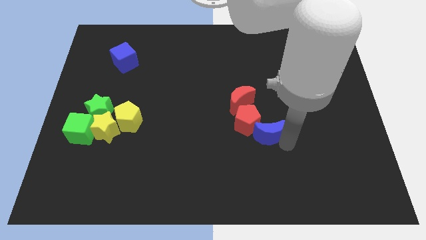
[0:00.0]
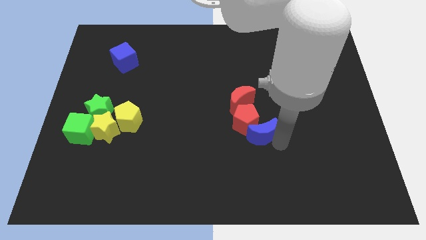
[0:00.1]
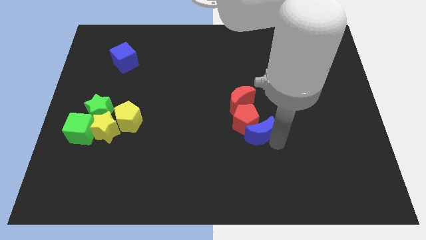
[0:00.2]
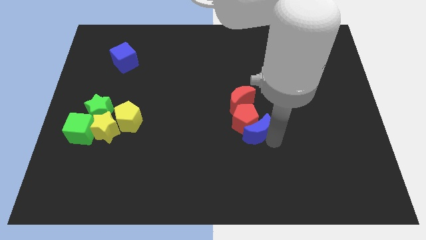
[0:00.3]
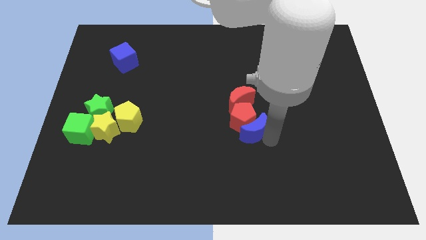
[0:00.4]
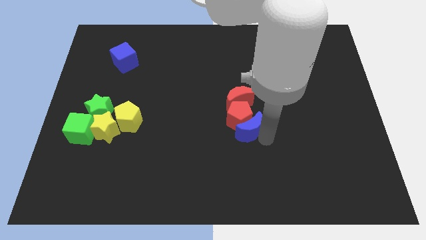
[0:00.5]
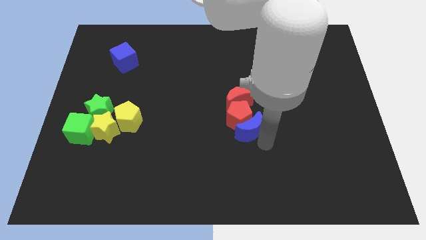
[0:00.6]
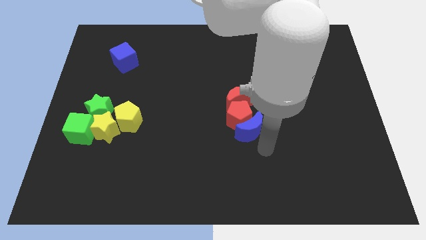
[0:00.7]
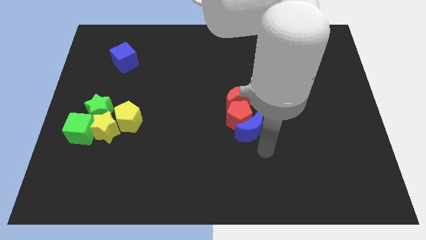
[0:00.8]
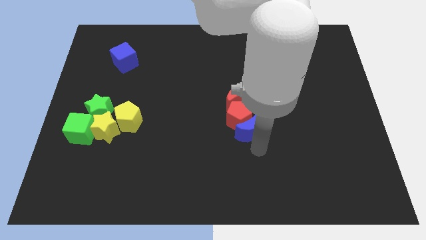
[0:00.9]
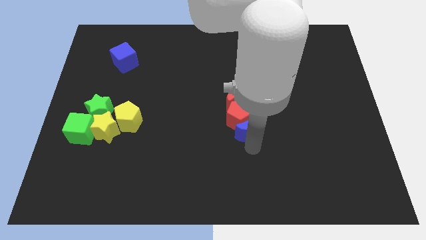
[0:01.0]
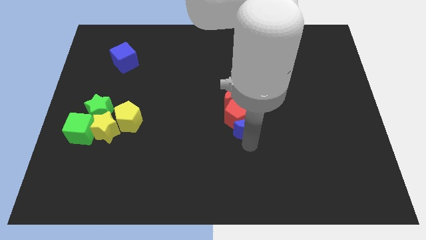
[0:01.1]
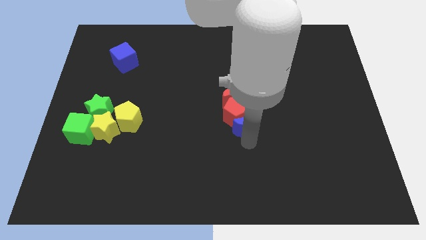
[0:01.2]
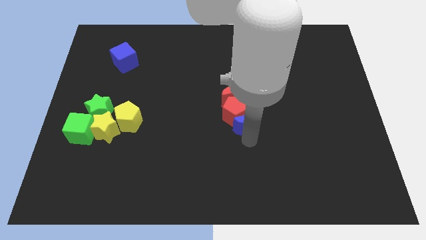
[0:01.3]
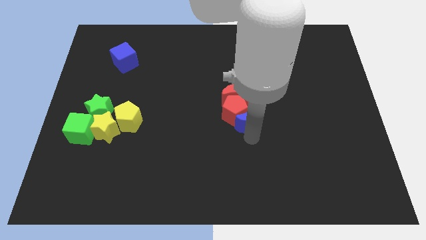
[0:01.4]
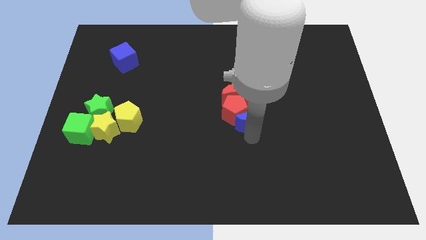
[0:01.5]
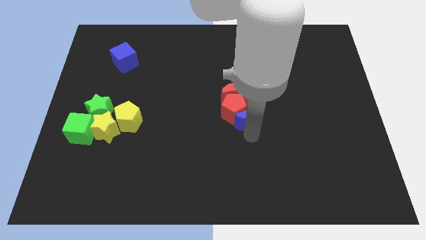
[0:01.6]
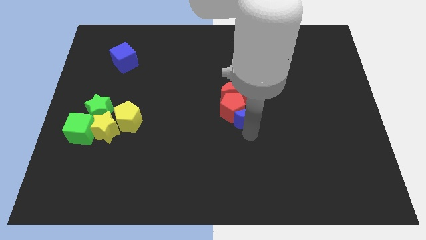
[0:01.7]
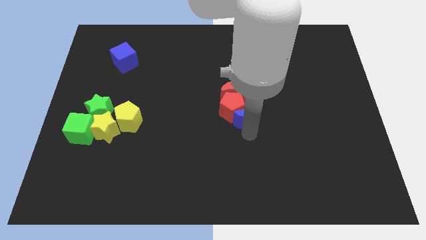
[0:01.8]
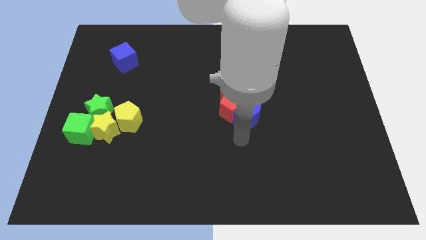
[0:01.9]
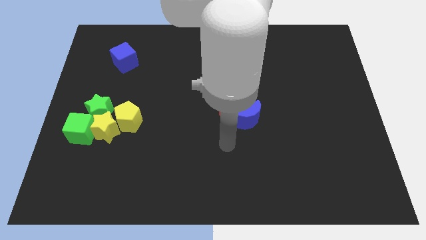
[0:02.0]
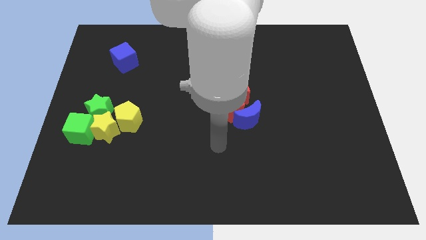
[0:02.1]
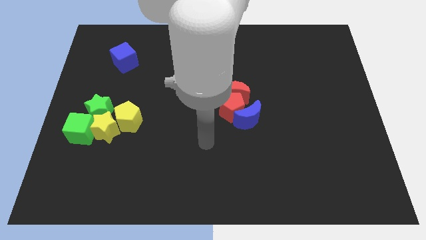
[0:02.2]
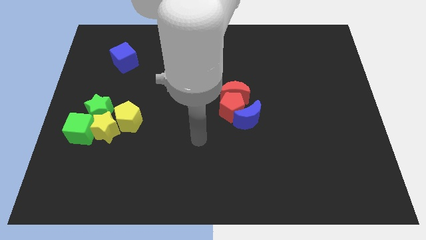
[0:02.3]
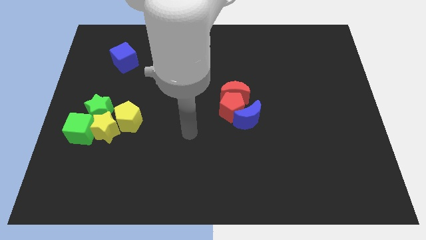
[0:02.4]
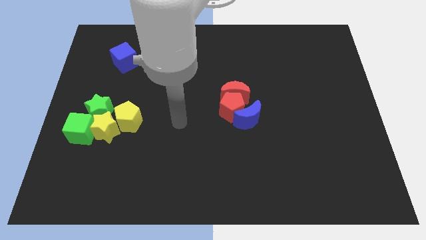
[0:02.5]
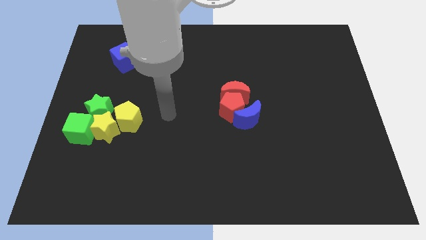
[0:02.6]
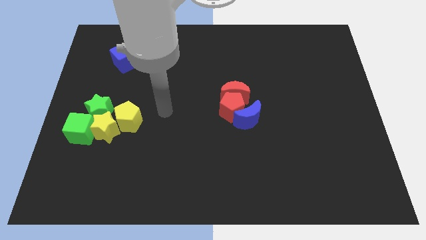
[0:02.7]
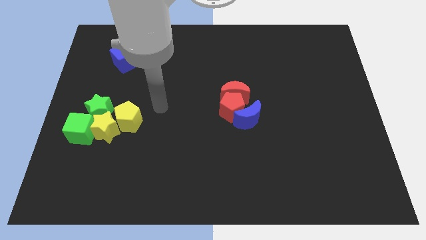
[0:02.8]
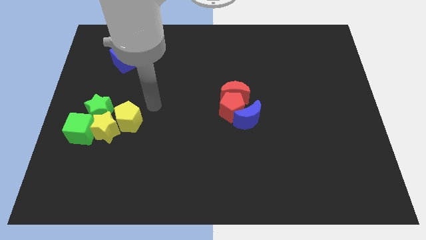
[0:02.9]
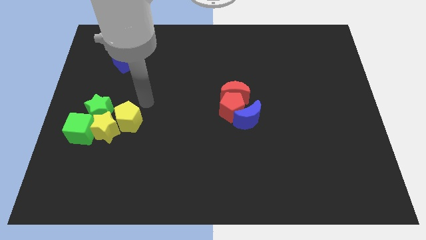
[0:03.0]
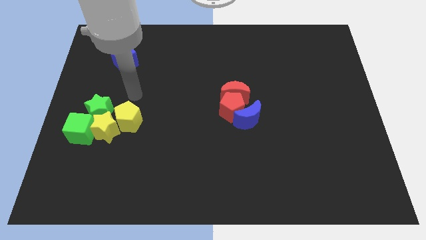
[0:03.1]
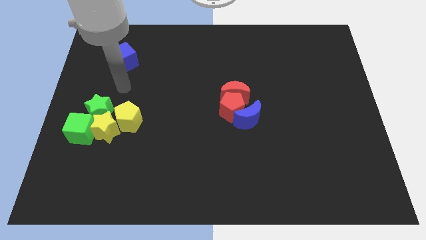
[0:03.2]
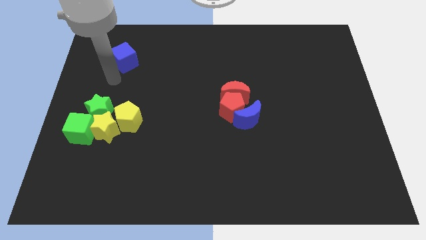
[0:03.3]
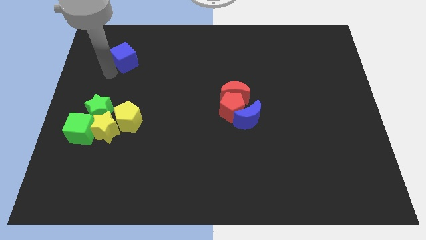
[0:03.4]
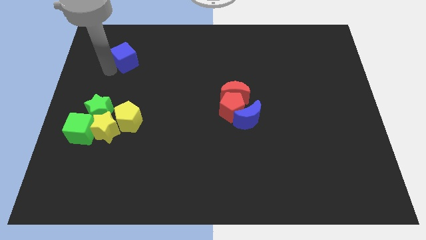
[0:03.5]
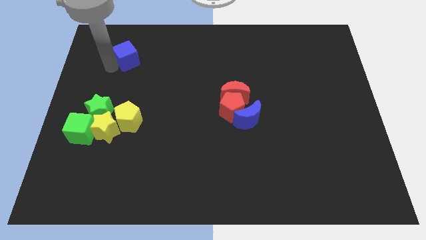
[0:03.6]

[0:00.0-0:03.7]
slightly push the red blocks and blue moon to the center

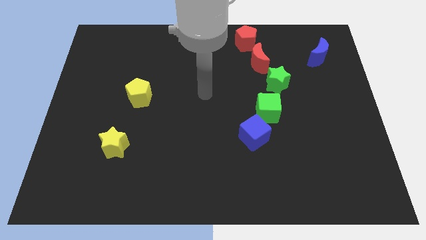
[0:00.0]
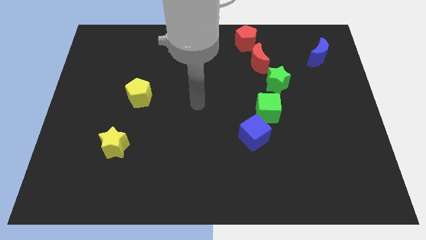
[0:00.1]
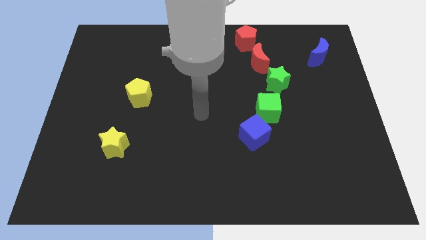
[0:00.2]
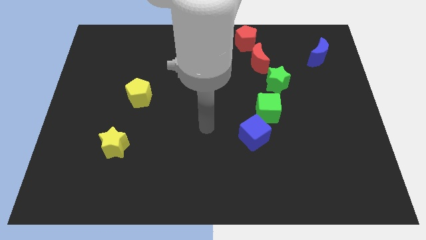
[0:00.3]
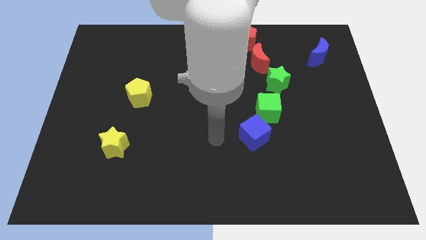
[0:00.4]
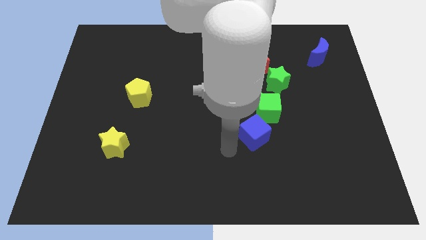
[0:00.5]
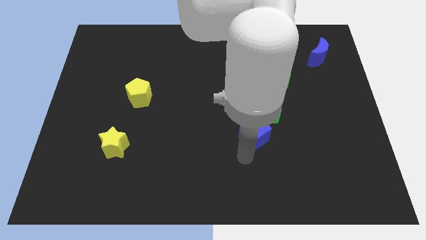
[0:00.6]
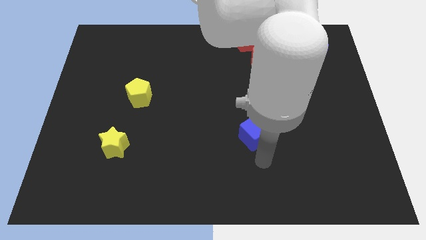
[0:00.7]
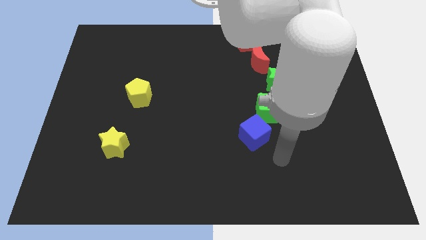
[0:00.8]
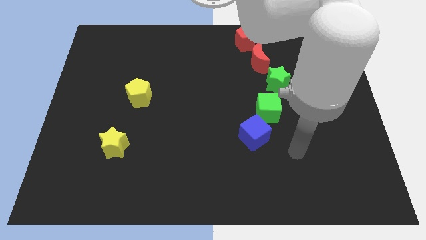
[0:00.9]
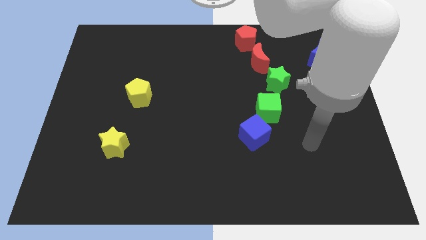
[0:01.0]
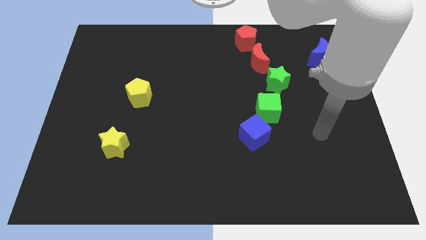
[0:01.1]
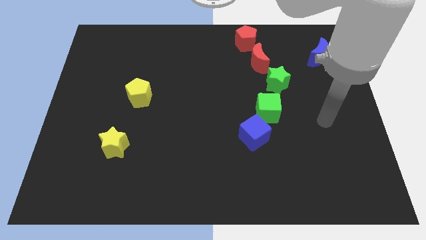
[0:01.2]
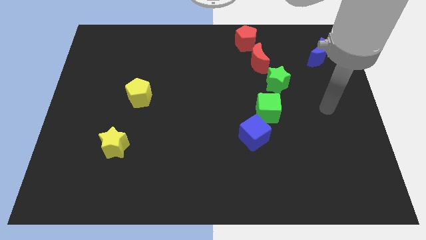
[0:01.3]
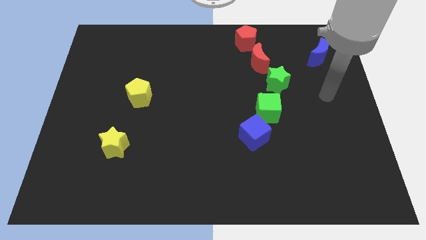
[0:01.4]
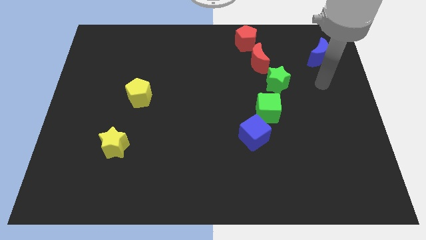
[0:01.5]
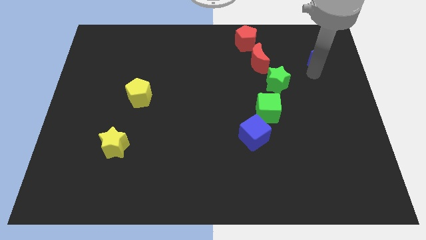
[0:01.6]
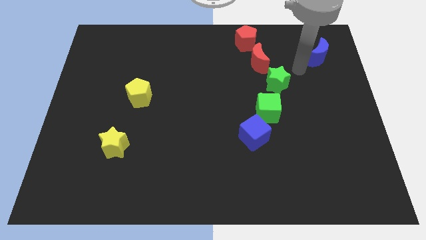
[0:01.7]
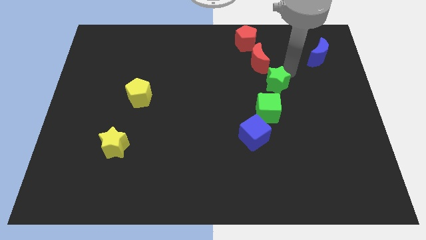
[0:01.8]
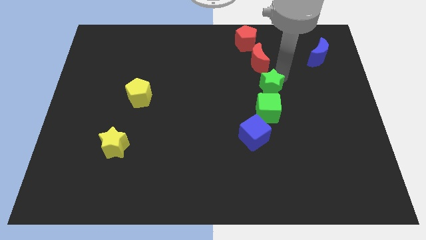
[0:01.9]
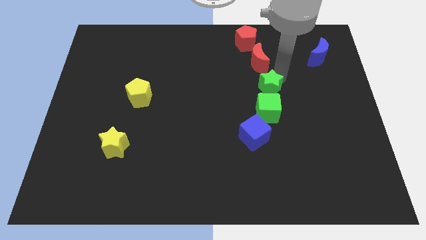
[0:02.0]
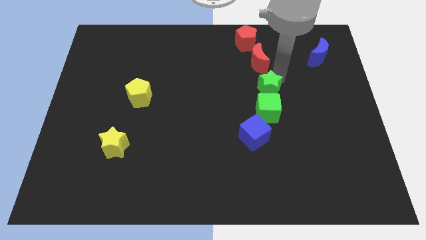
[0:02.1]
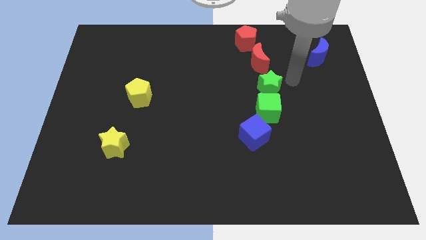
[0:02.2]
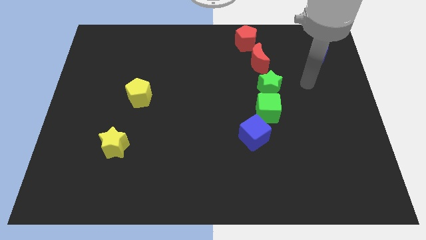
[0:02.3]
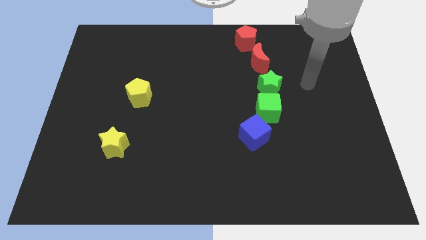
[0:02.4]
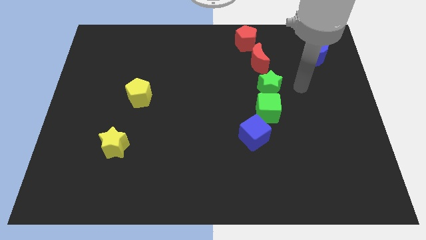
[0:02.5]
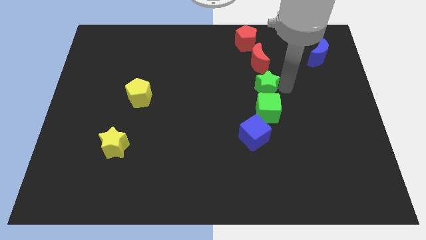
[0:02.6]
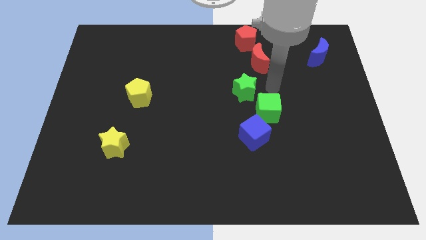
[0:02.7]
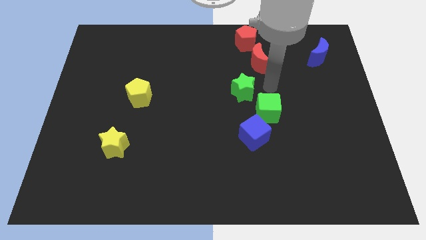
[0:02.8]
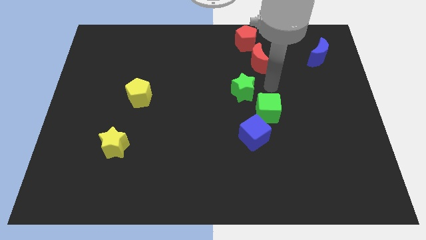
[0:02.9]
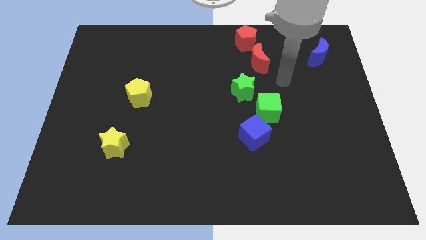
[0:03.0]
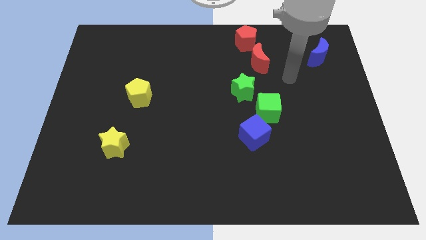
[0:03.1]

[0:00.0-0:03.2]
push the green star diagonally on the top left side of the green cube

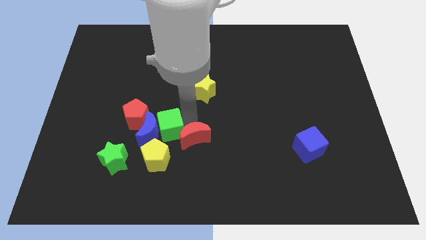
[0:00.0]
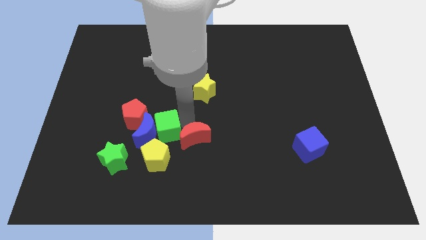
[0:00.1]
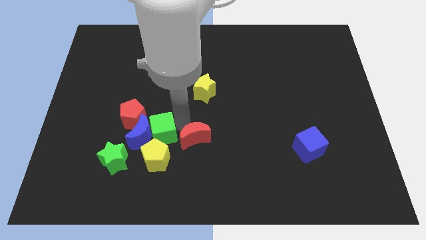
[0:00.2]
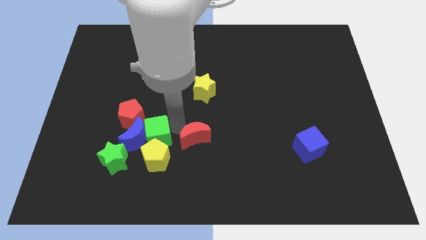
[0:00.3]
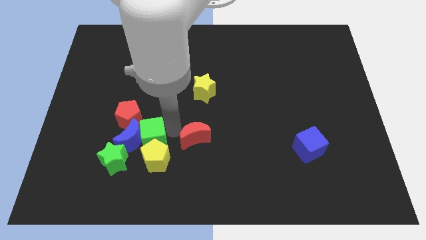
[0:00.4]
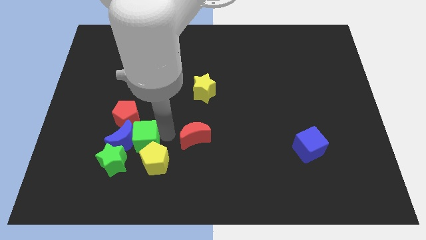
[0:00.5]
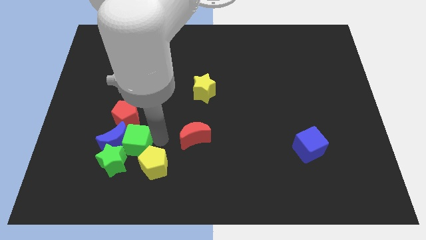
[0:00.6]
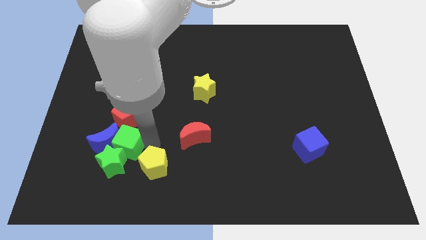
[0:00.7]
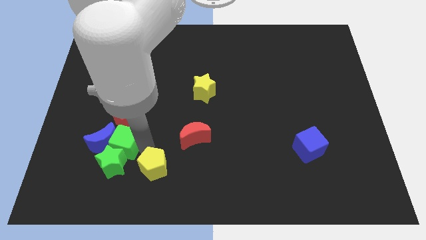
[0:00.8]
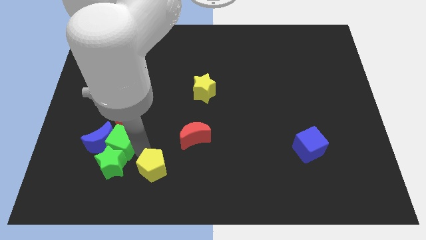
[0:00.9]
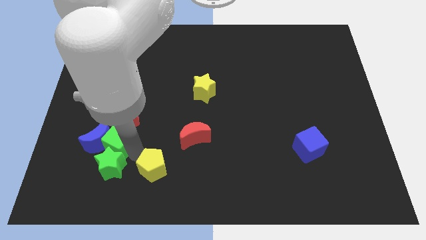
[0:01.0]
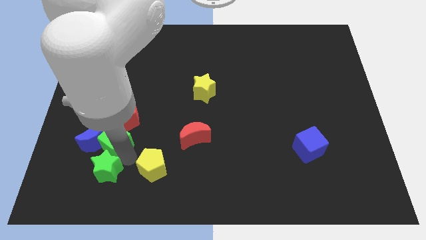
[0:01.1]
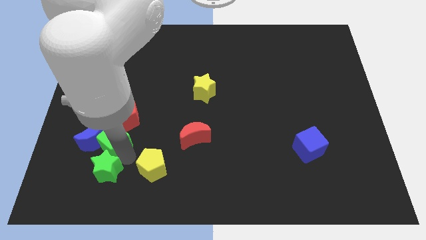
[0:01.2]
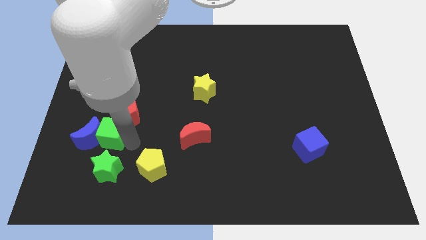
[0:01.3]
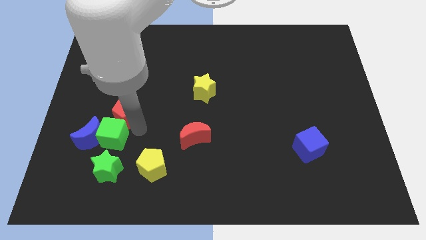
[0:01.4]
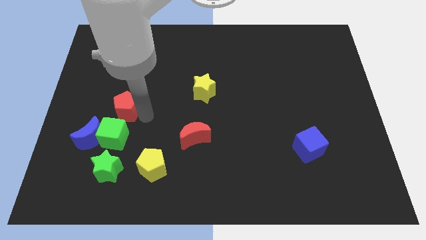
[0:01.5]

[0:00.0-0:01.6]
drag the green cube above the green star

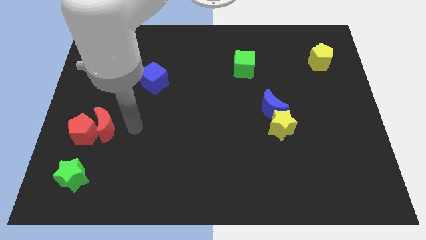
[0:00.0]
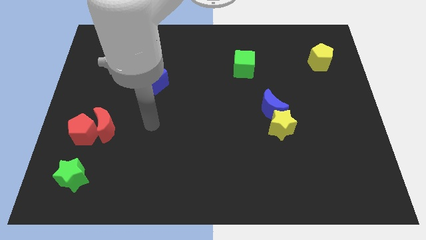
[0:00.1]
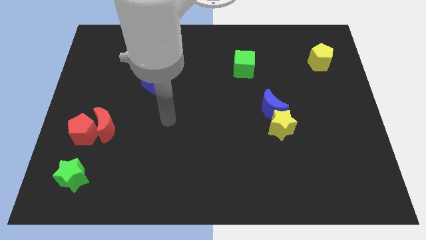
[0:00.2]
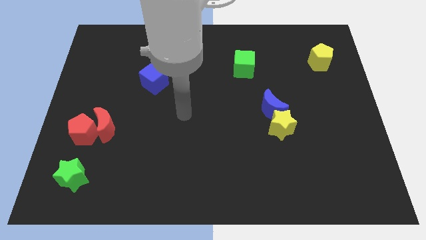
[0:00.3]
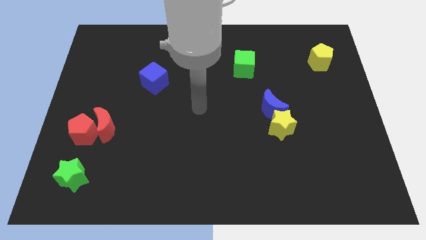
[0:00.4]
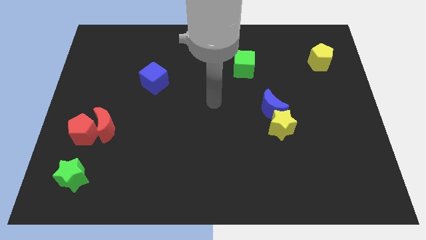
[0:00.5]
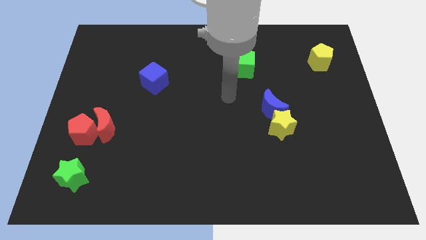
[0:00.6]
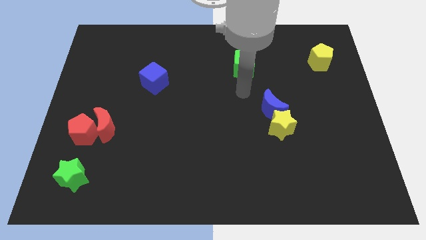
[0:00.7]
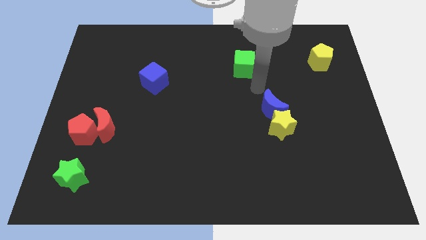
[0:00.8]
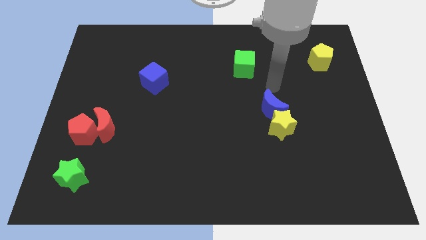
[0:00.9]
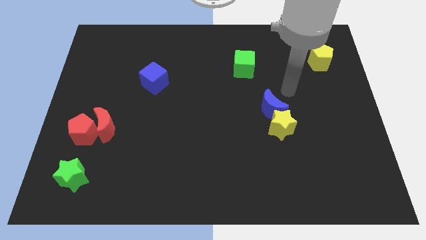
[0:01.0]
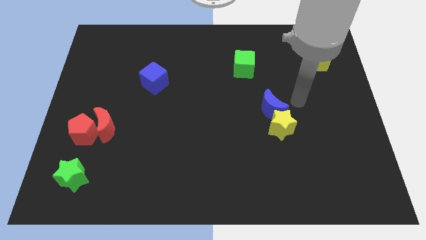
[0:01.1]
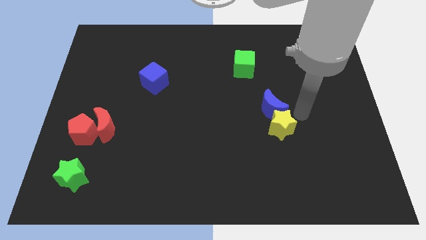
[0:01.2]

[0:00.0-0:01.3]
move your hand towards the yellow star
